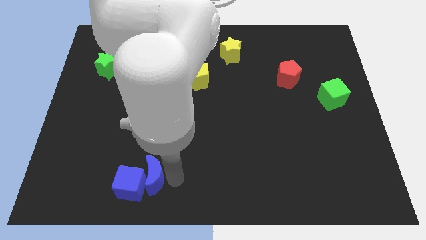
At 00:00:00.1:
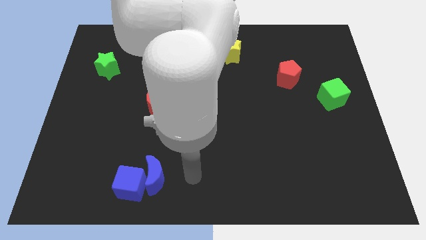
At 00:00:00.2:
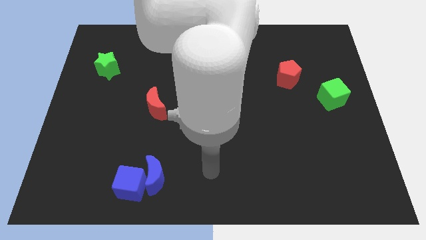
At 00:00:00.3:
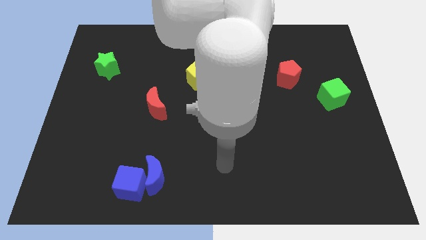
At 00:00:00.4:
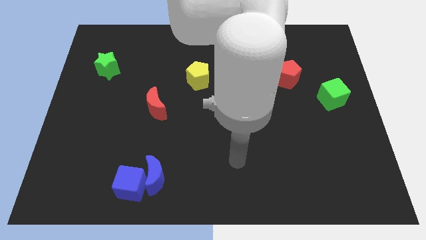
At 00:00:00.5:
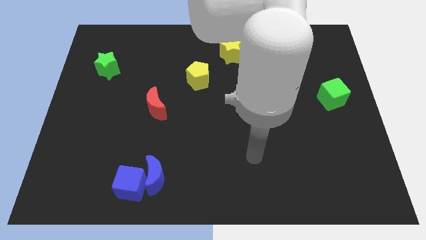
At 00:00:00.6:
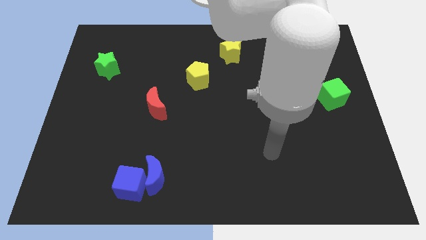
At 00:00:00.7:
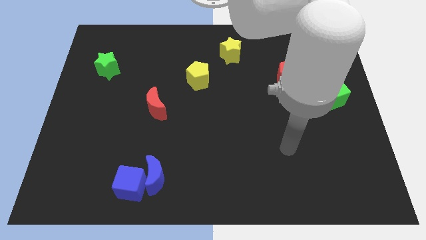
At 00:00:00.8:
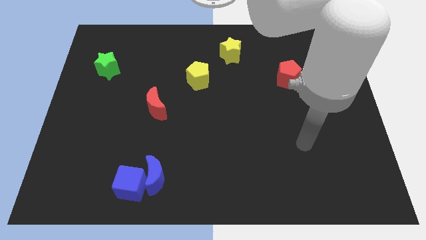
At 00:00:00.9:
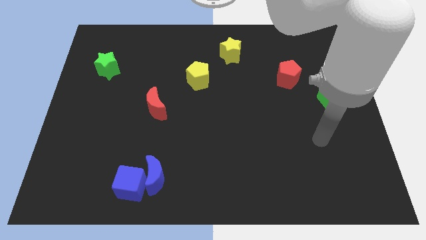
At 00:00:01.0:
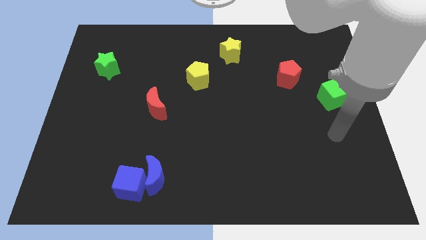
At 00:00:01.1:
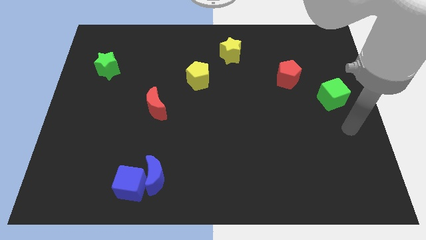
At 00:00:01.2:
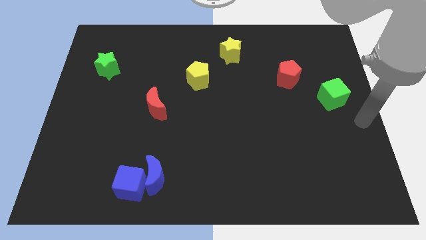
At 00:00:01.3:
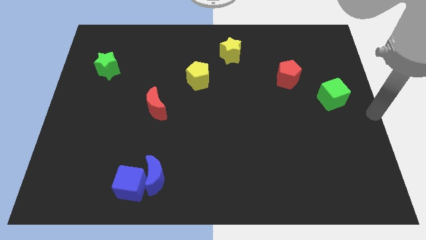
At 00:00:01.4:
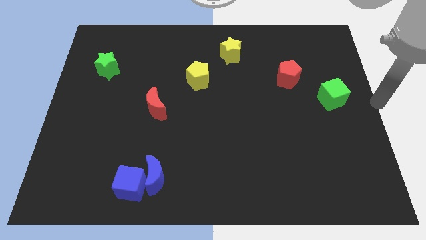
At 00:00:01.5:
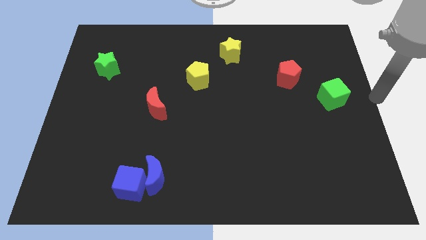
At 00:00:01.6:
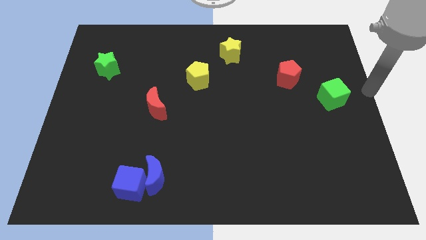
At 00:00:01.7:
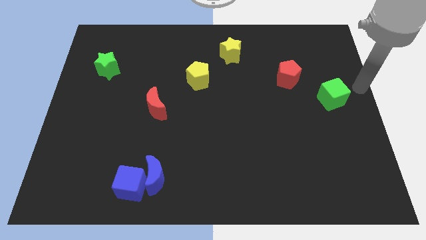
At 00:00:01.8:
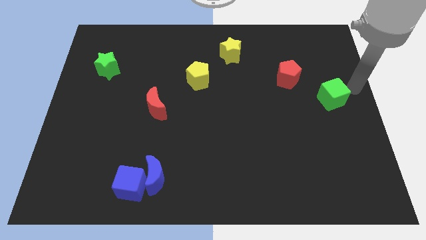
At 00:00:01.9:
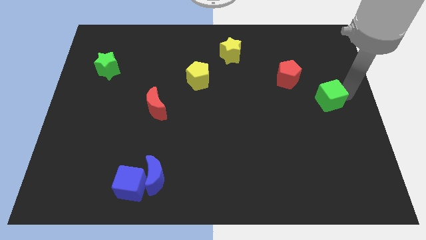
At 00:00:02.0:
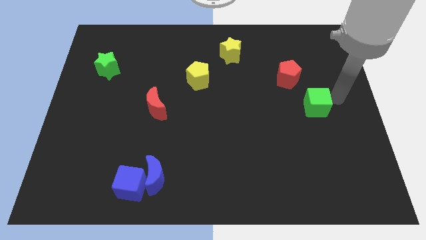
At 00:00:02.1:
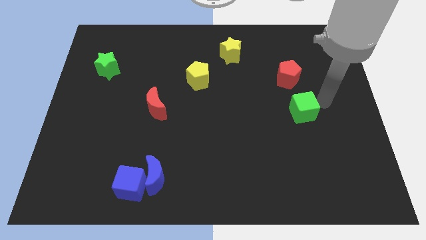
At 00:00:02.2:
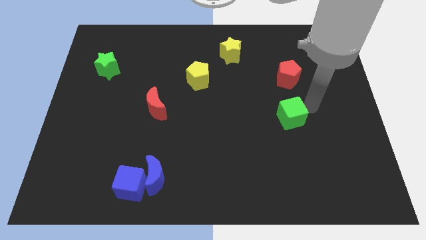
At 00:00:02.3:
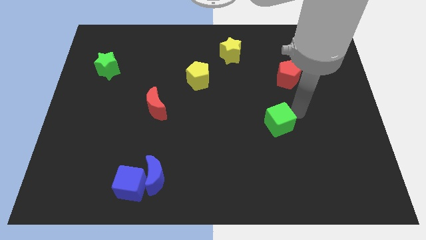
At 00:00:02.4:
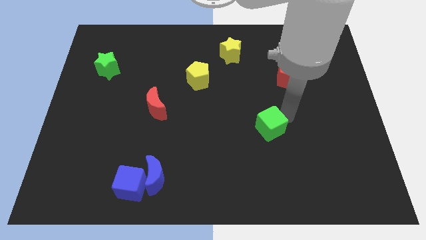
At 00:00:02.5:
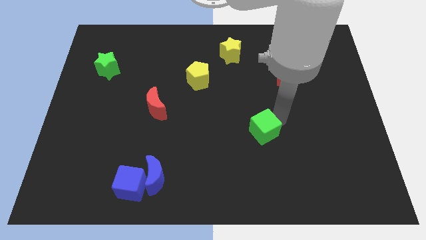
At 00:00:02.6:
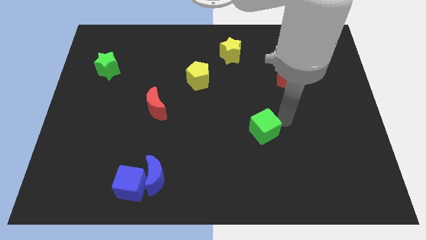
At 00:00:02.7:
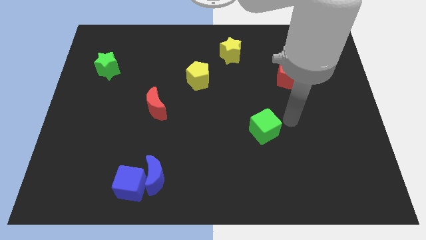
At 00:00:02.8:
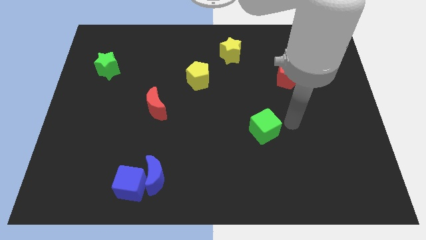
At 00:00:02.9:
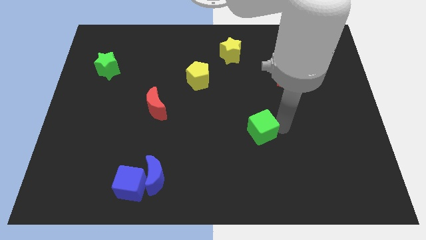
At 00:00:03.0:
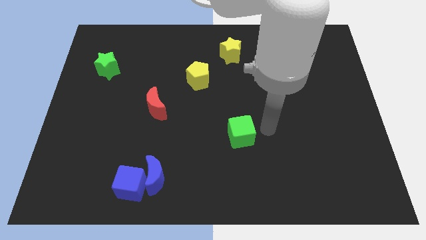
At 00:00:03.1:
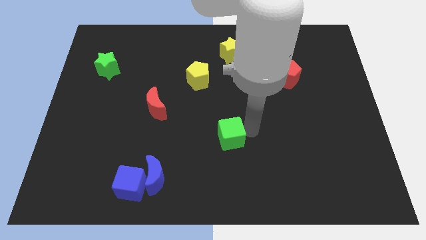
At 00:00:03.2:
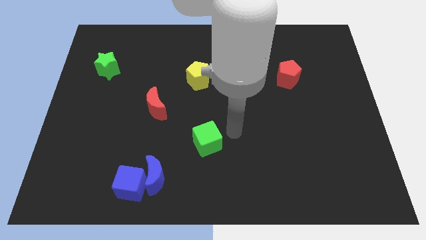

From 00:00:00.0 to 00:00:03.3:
slide the green cube towards the group of blue blocks

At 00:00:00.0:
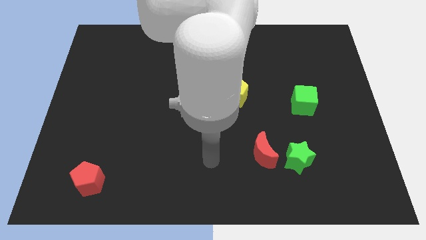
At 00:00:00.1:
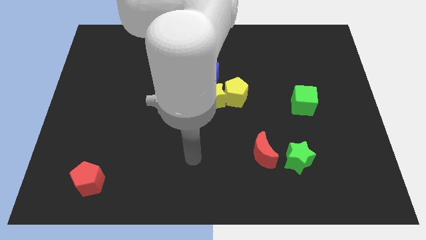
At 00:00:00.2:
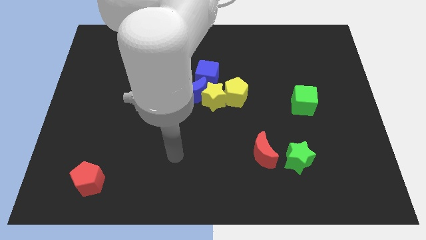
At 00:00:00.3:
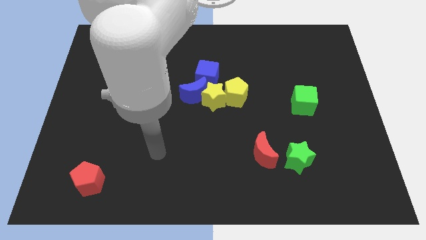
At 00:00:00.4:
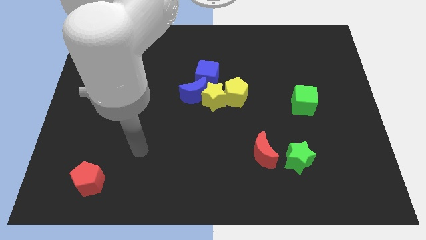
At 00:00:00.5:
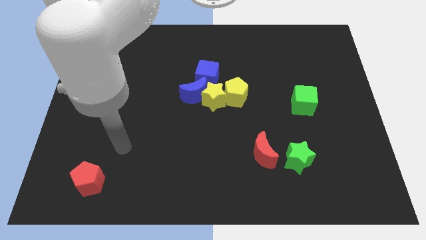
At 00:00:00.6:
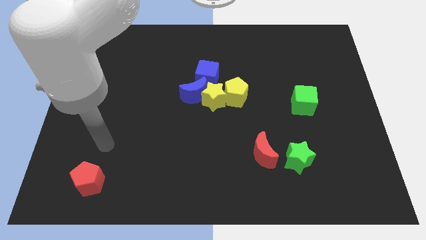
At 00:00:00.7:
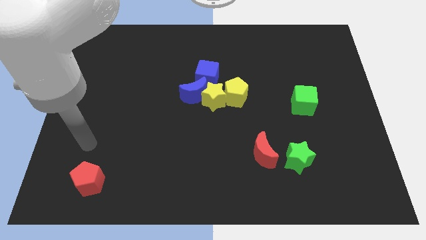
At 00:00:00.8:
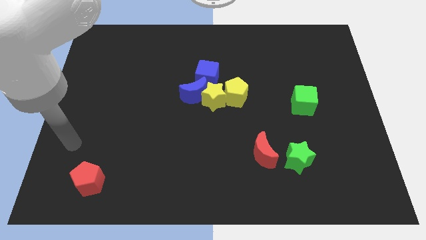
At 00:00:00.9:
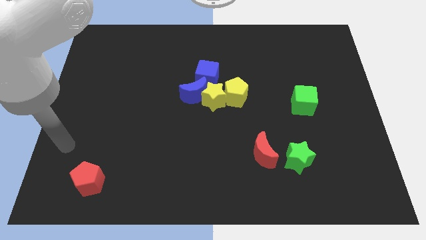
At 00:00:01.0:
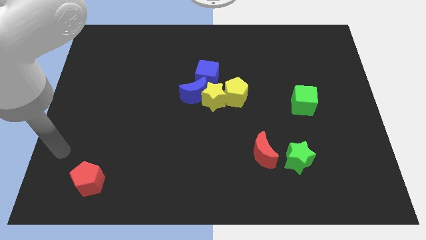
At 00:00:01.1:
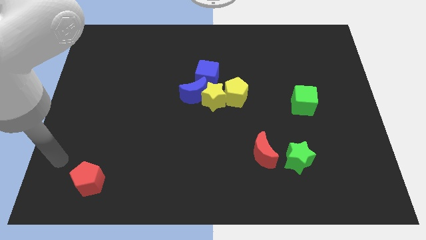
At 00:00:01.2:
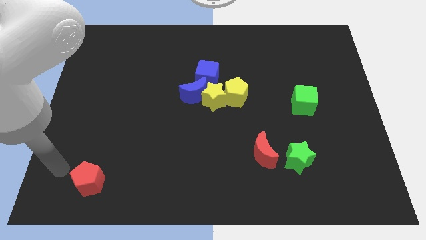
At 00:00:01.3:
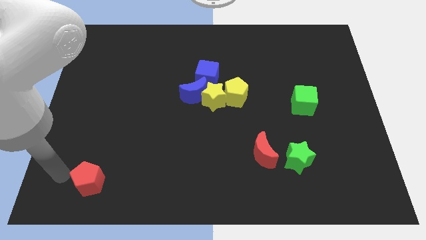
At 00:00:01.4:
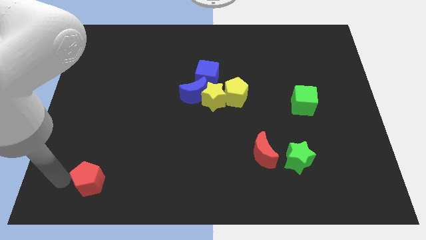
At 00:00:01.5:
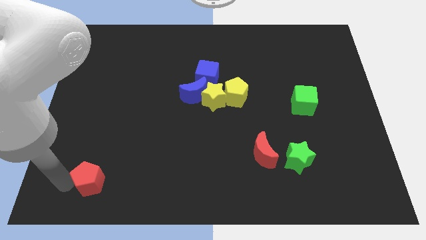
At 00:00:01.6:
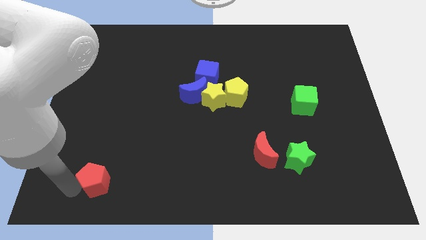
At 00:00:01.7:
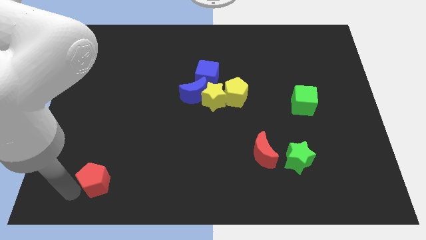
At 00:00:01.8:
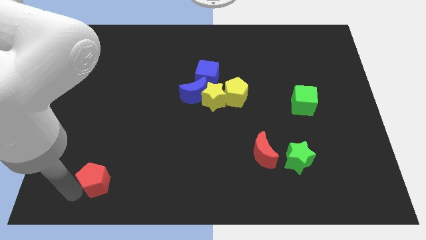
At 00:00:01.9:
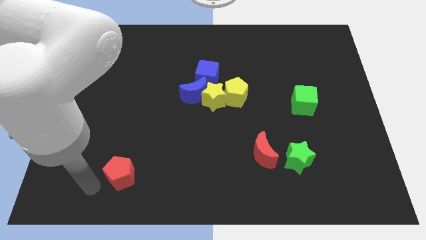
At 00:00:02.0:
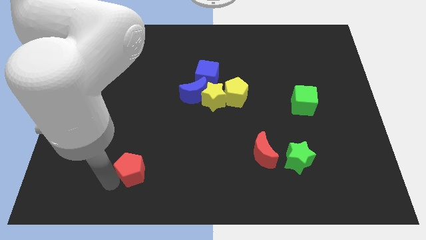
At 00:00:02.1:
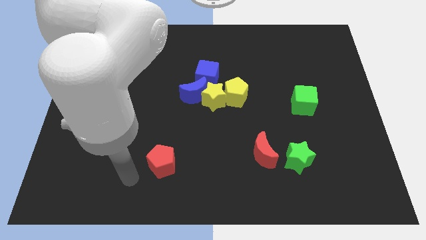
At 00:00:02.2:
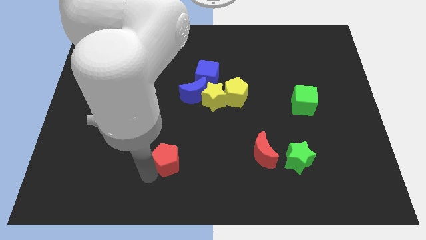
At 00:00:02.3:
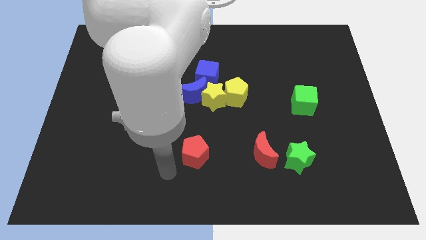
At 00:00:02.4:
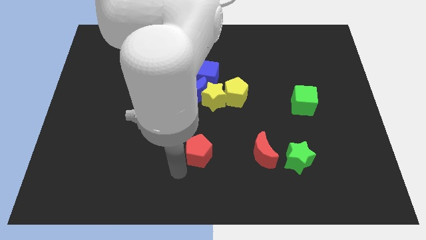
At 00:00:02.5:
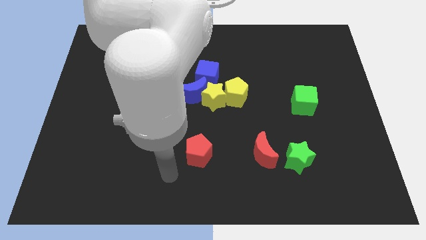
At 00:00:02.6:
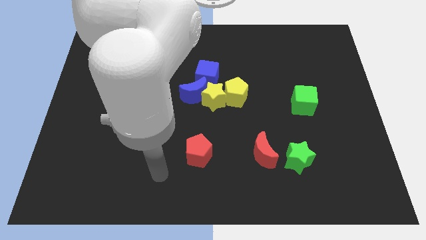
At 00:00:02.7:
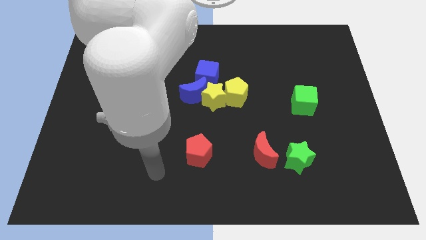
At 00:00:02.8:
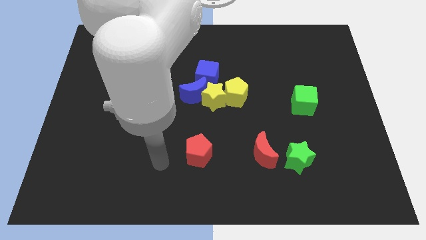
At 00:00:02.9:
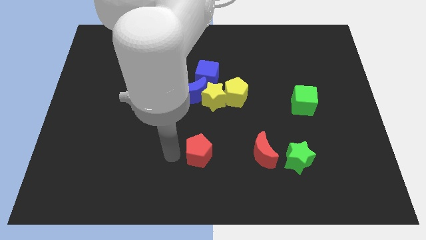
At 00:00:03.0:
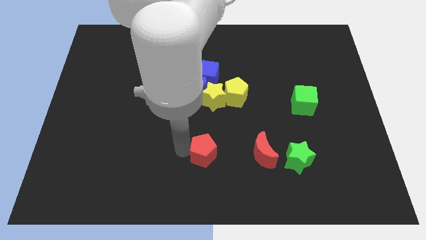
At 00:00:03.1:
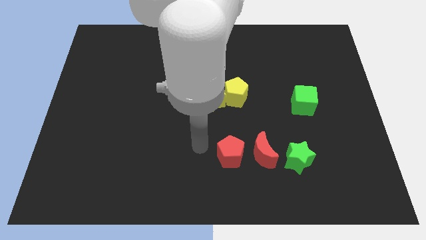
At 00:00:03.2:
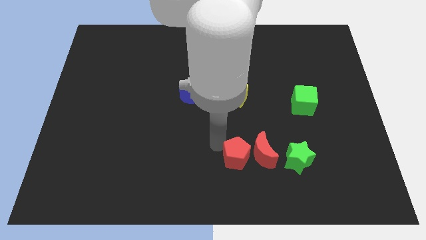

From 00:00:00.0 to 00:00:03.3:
push the red pentagon to the left of the red crescent

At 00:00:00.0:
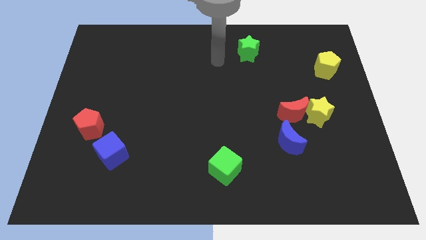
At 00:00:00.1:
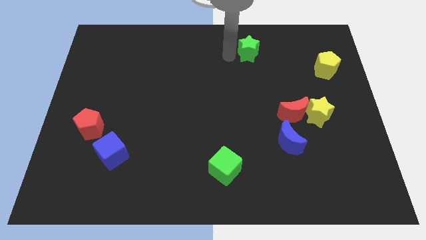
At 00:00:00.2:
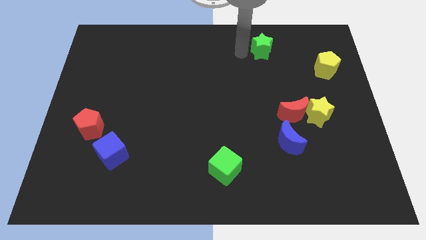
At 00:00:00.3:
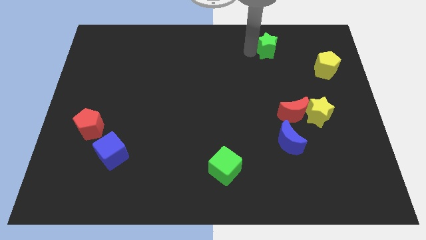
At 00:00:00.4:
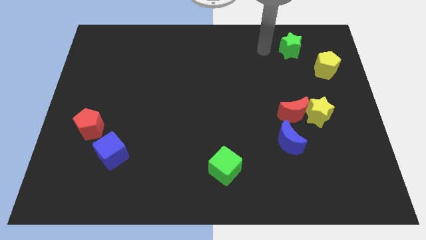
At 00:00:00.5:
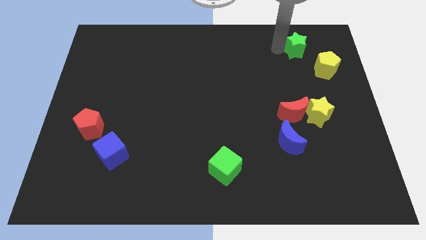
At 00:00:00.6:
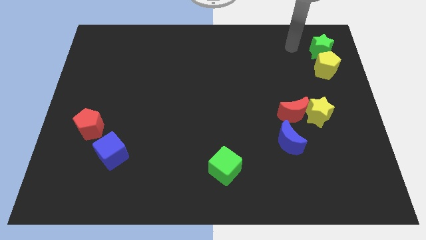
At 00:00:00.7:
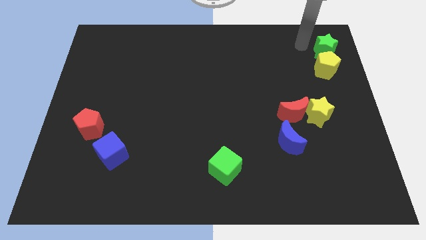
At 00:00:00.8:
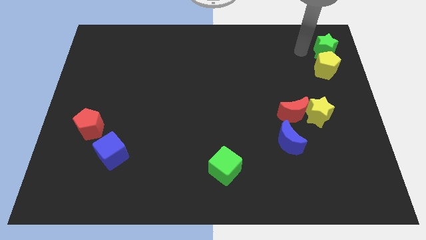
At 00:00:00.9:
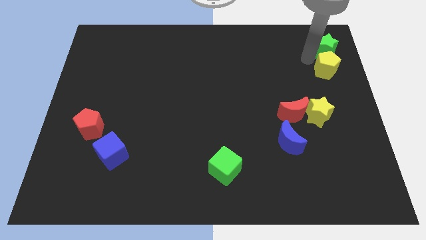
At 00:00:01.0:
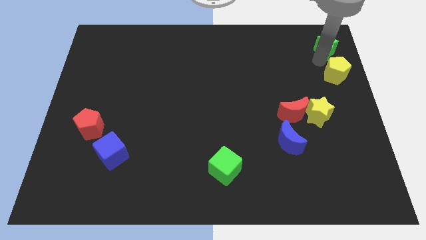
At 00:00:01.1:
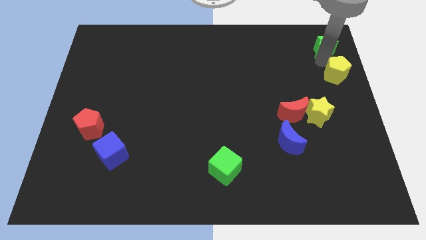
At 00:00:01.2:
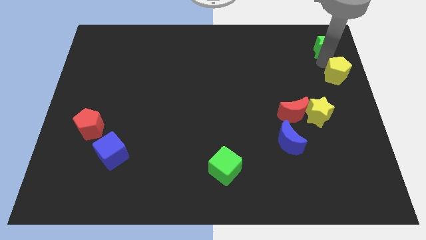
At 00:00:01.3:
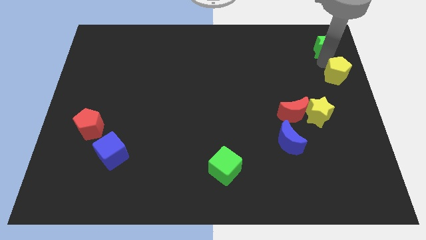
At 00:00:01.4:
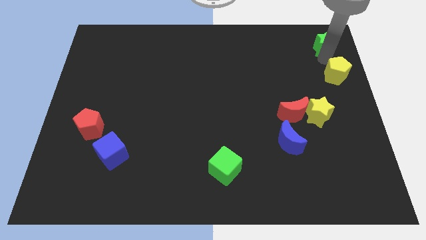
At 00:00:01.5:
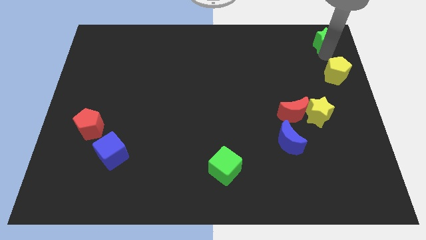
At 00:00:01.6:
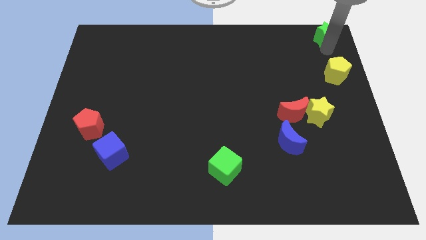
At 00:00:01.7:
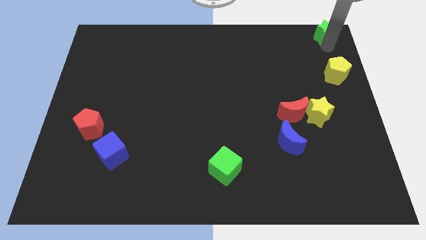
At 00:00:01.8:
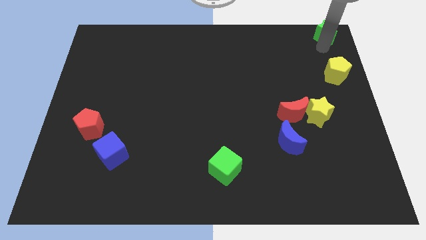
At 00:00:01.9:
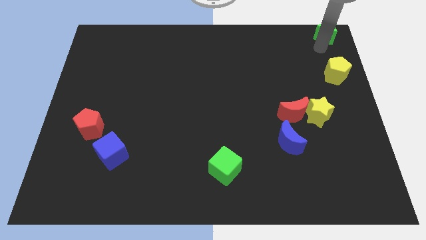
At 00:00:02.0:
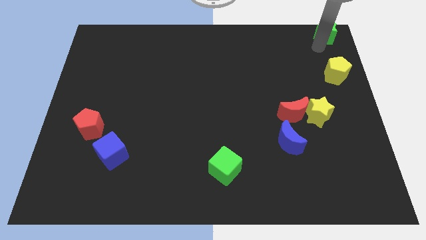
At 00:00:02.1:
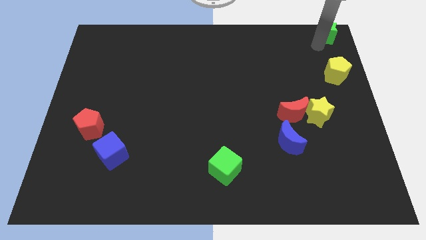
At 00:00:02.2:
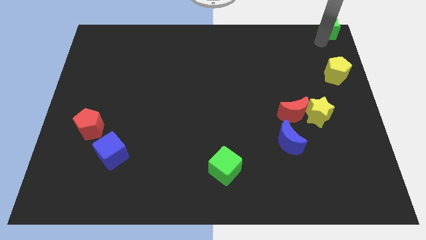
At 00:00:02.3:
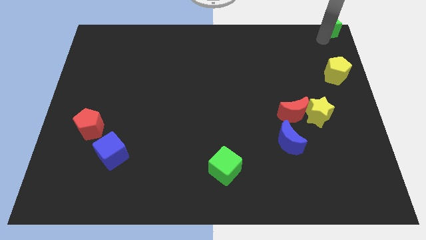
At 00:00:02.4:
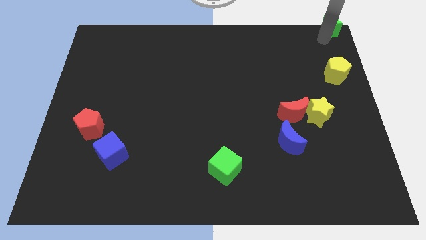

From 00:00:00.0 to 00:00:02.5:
place the green star in the top right of the board
